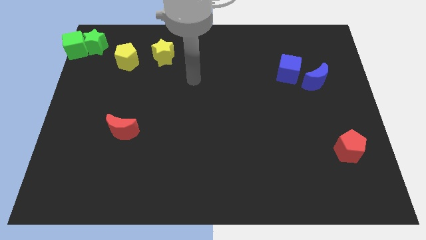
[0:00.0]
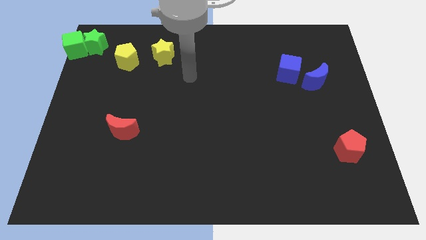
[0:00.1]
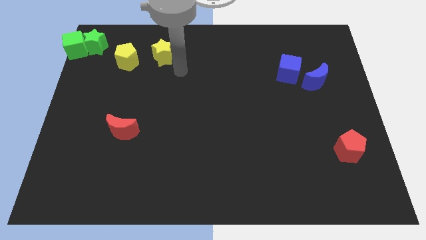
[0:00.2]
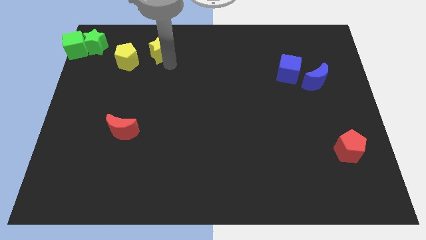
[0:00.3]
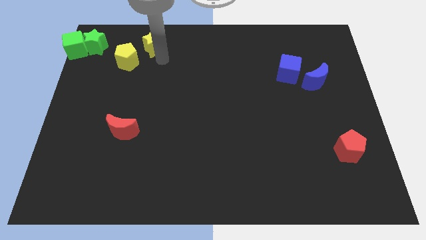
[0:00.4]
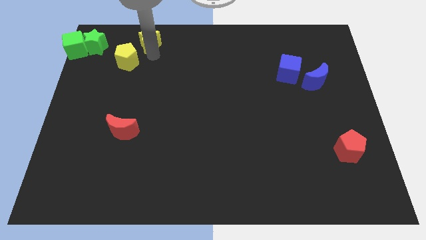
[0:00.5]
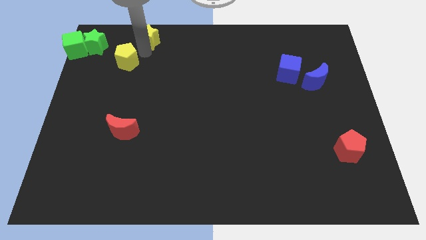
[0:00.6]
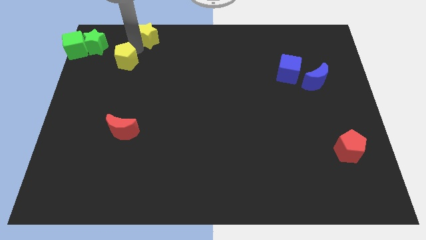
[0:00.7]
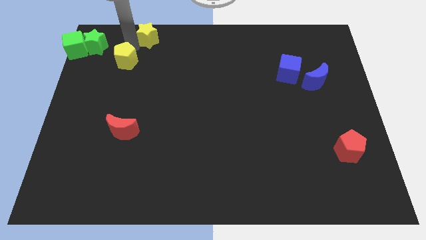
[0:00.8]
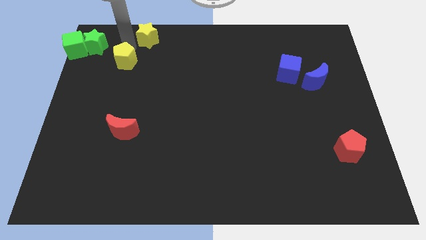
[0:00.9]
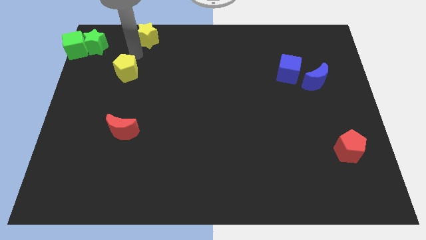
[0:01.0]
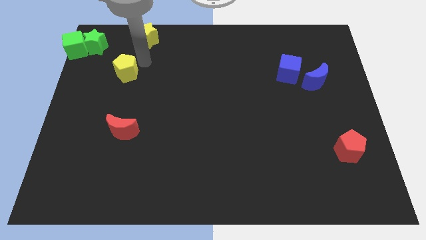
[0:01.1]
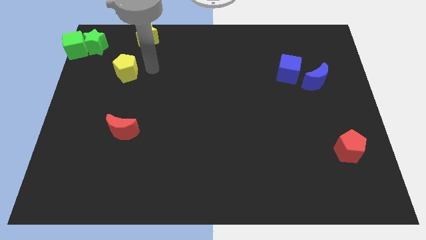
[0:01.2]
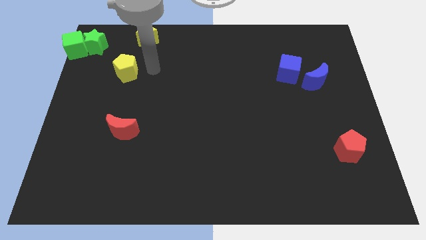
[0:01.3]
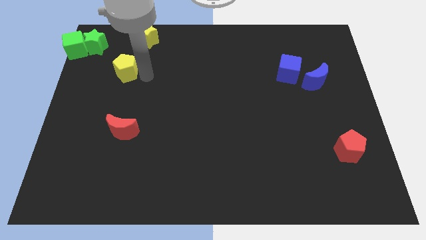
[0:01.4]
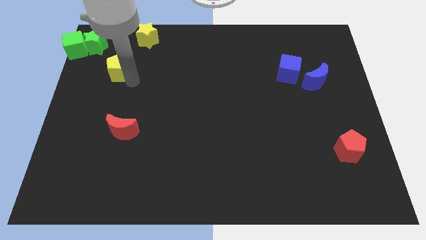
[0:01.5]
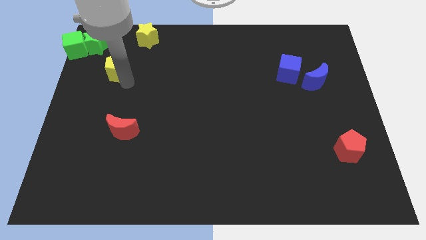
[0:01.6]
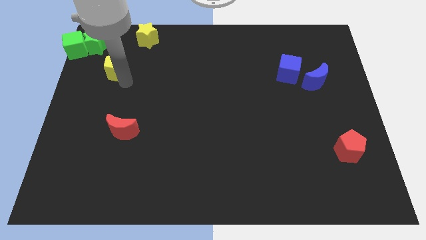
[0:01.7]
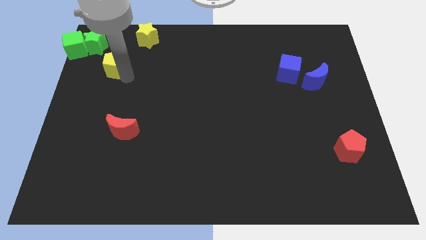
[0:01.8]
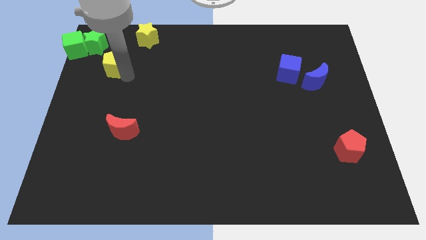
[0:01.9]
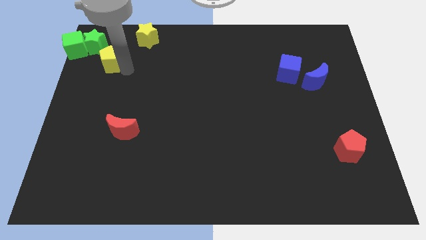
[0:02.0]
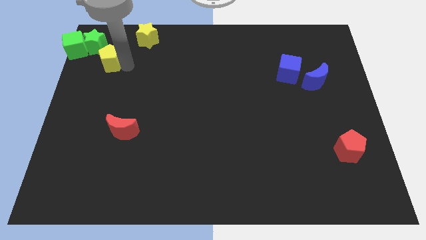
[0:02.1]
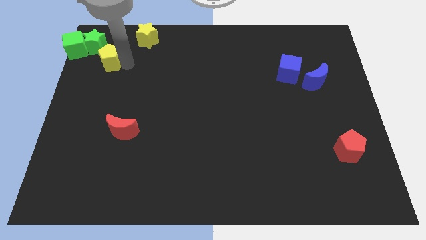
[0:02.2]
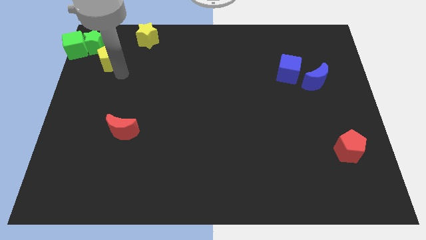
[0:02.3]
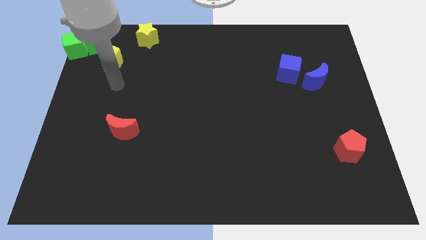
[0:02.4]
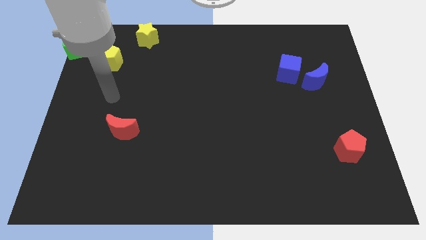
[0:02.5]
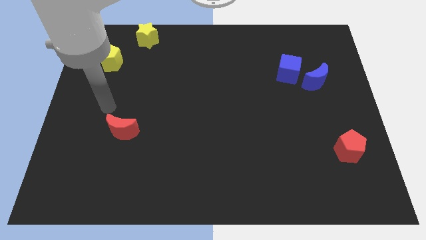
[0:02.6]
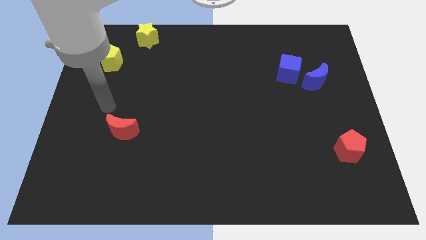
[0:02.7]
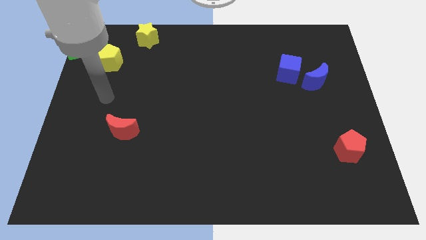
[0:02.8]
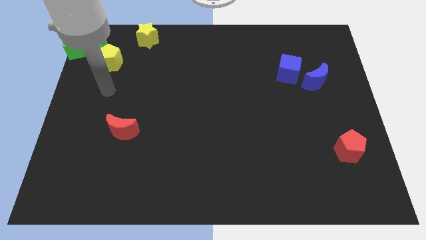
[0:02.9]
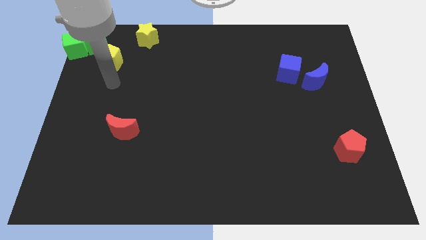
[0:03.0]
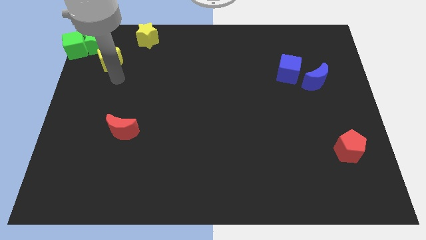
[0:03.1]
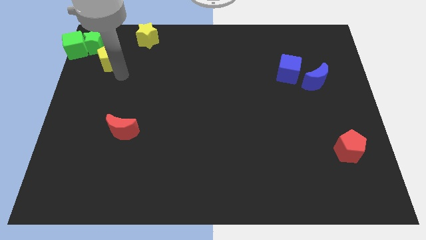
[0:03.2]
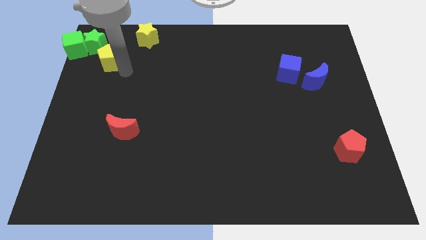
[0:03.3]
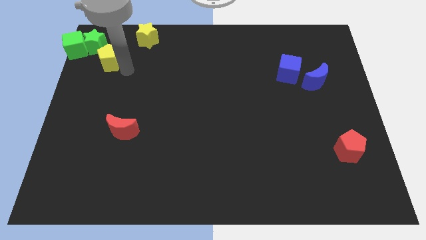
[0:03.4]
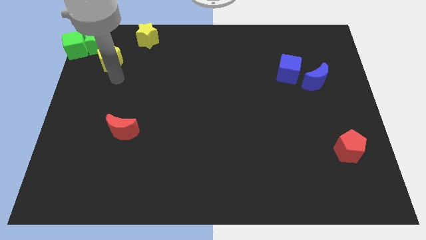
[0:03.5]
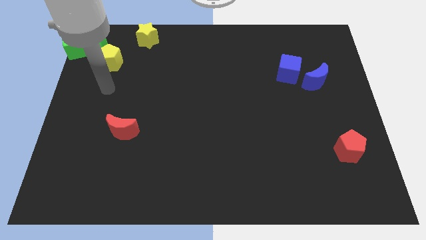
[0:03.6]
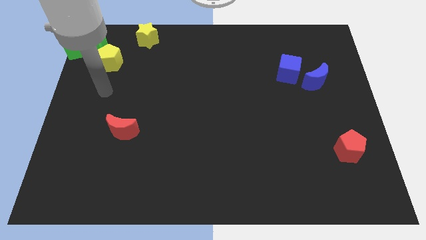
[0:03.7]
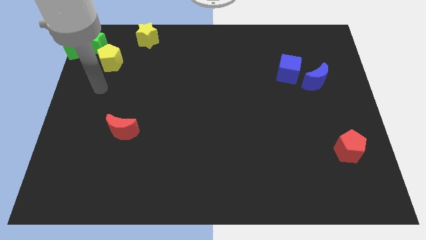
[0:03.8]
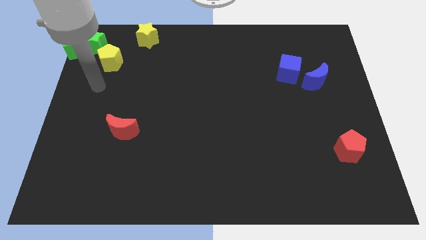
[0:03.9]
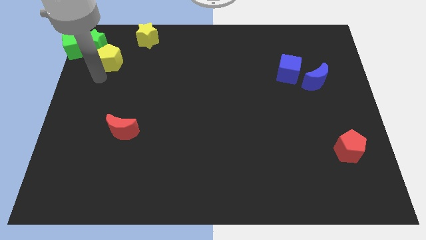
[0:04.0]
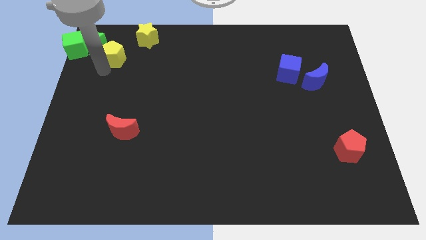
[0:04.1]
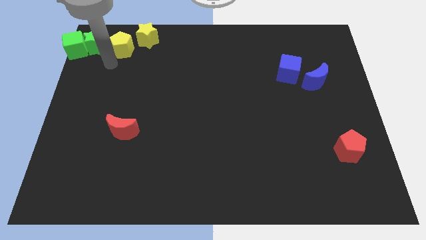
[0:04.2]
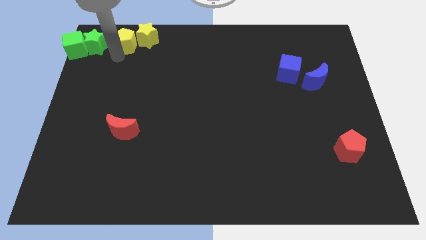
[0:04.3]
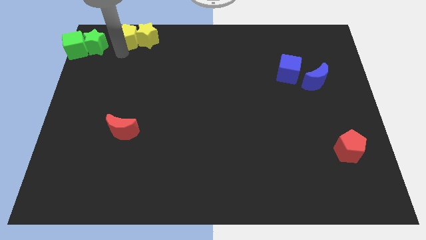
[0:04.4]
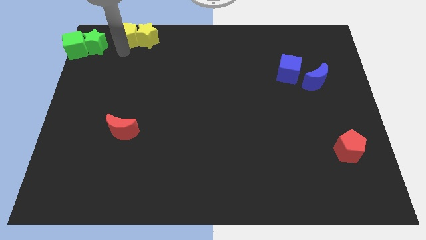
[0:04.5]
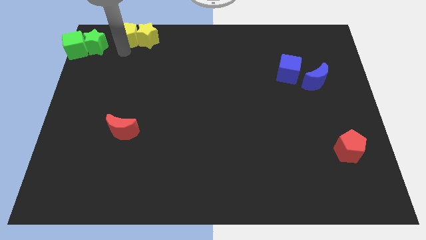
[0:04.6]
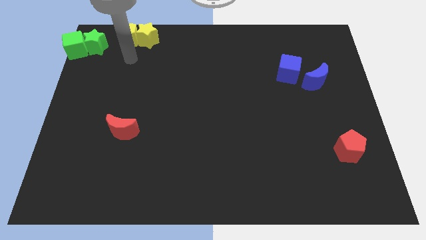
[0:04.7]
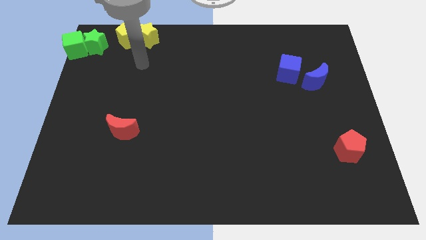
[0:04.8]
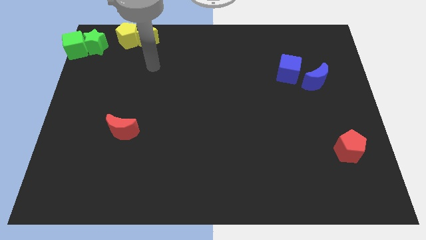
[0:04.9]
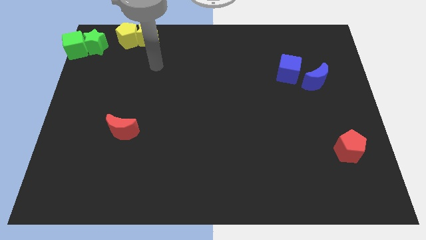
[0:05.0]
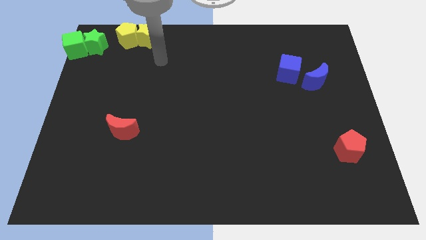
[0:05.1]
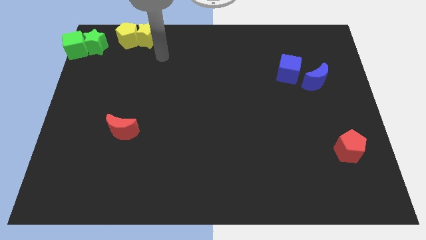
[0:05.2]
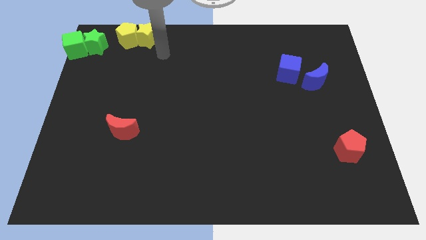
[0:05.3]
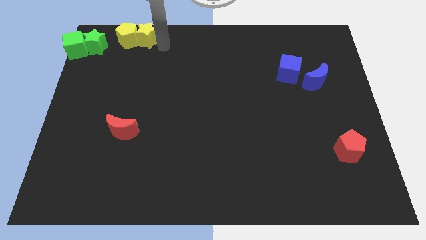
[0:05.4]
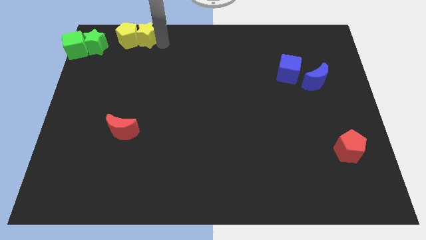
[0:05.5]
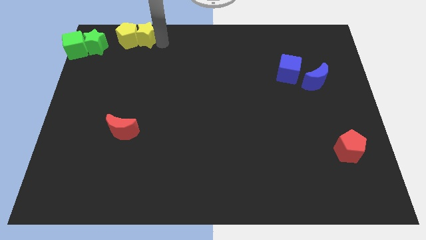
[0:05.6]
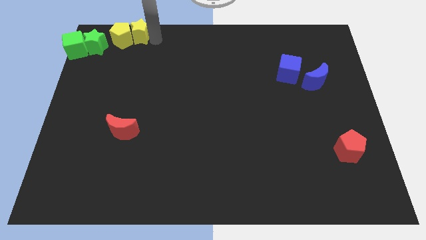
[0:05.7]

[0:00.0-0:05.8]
push the yellow blocks to the right of the green blocks

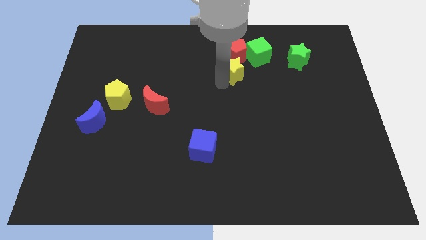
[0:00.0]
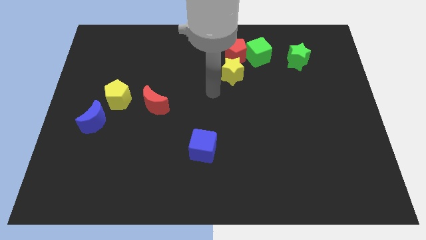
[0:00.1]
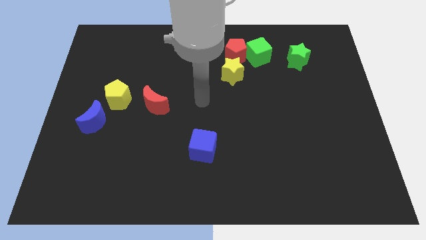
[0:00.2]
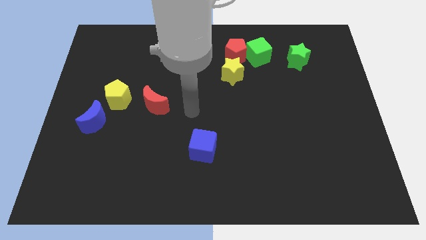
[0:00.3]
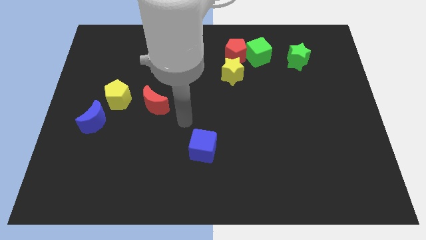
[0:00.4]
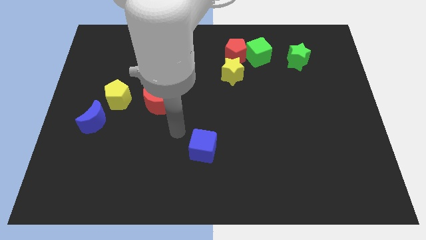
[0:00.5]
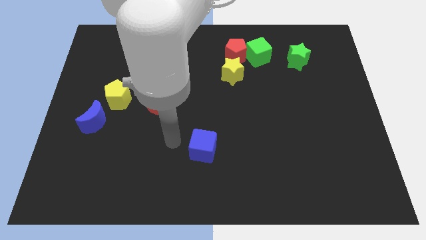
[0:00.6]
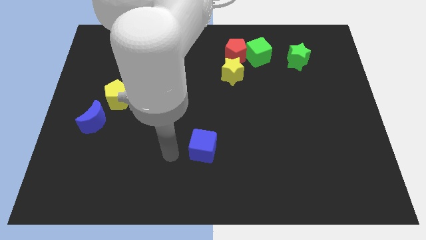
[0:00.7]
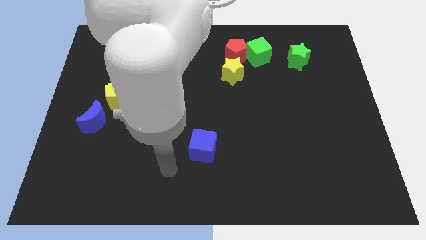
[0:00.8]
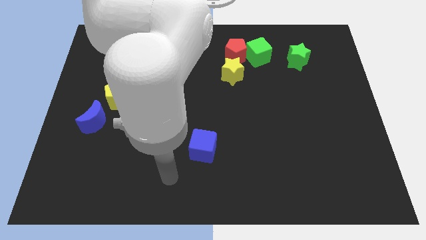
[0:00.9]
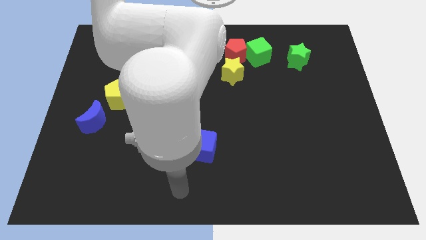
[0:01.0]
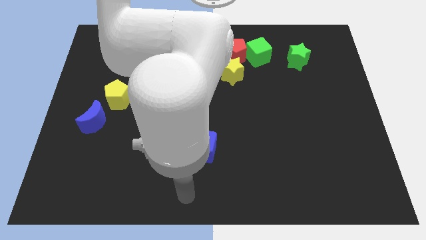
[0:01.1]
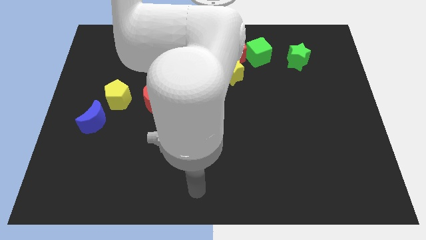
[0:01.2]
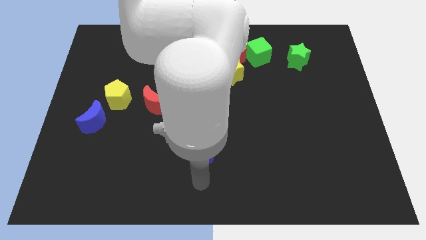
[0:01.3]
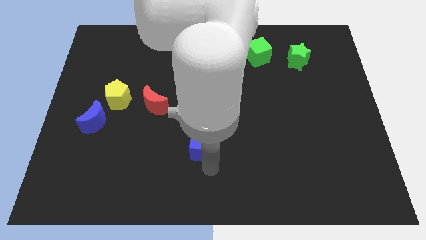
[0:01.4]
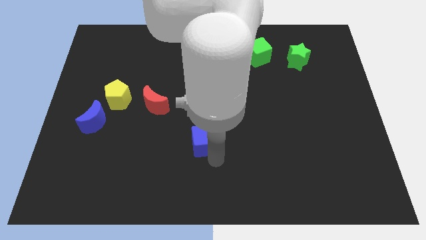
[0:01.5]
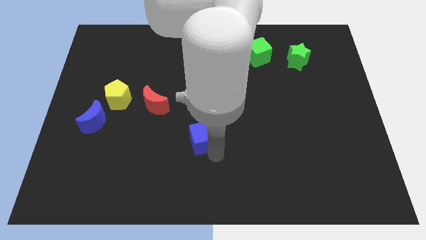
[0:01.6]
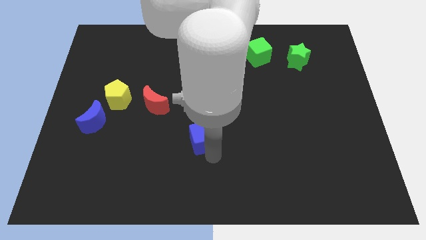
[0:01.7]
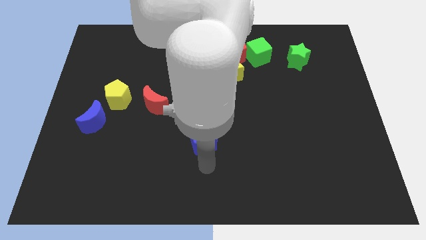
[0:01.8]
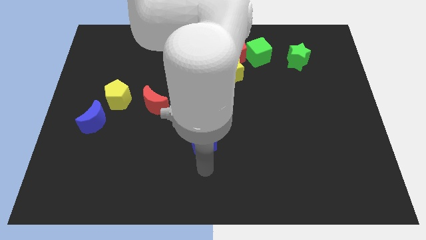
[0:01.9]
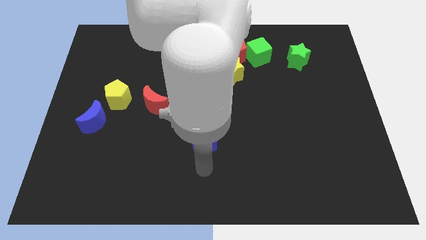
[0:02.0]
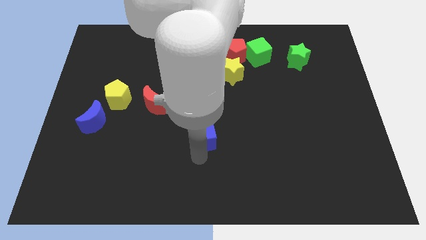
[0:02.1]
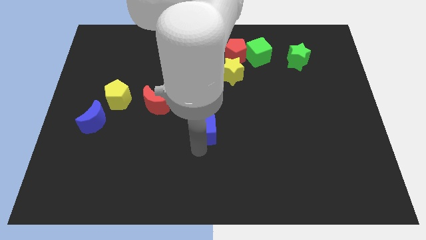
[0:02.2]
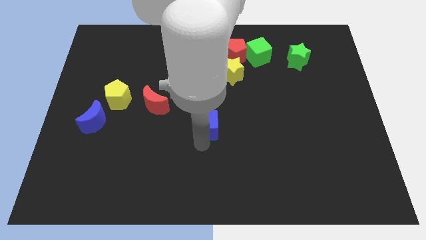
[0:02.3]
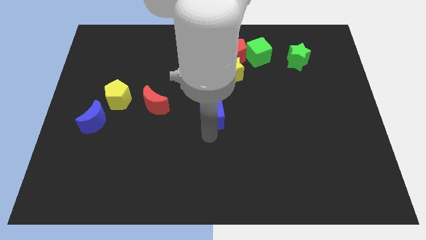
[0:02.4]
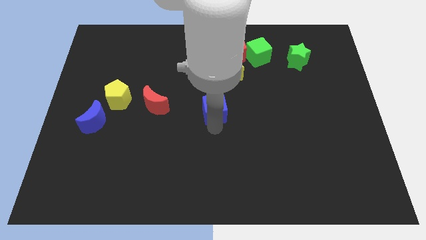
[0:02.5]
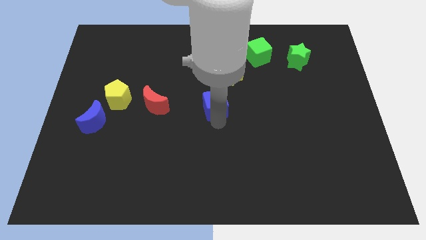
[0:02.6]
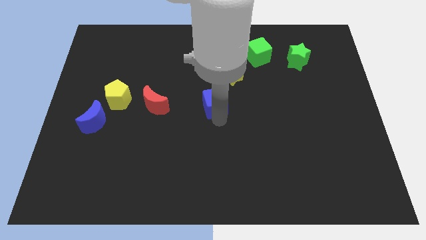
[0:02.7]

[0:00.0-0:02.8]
push the blue cube to the right of the red crescent

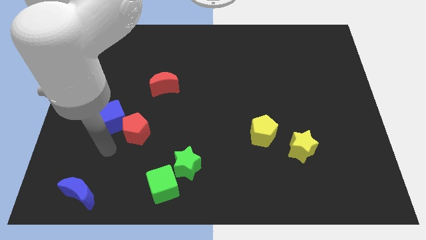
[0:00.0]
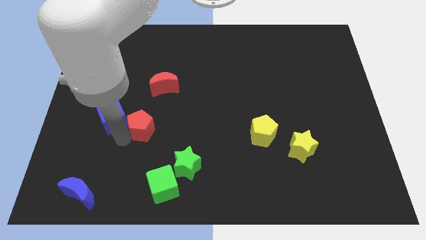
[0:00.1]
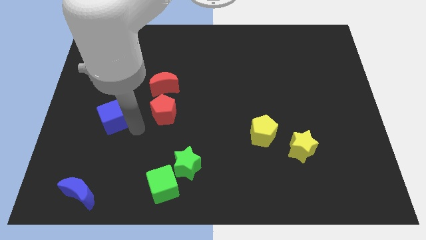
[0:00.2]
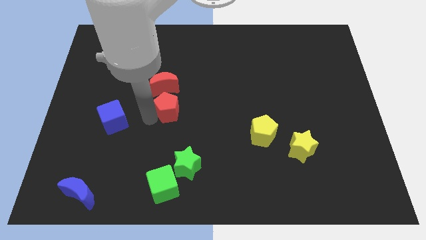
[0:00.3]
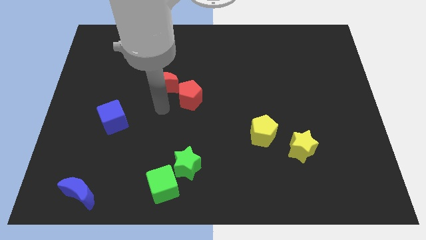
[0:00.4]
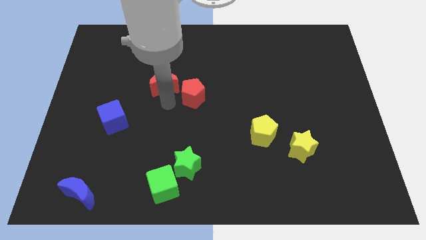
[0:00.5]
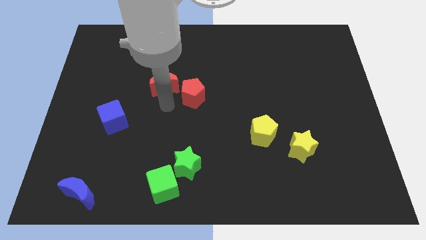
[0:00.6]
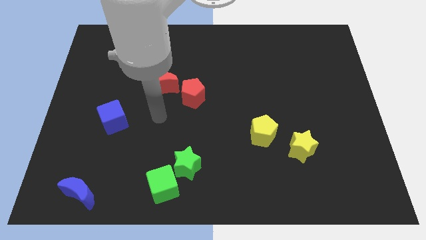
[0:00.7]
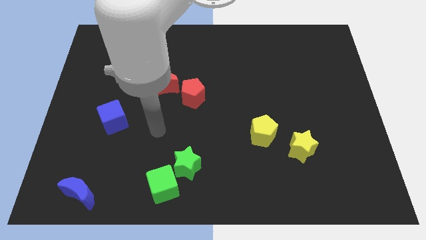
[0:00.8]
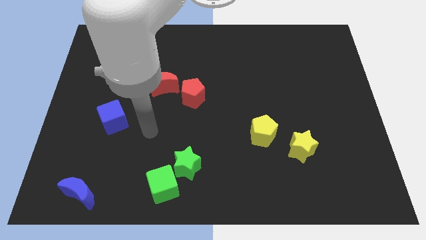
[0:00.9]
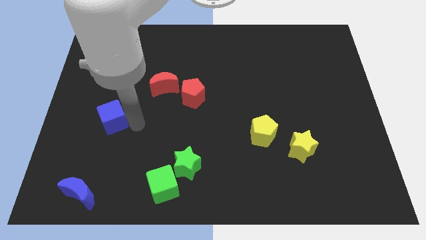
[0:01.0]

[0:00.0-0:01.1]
push red pentagon towards the center of the board
